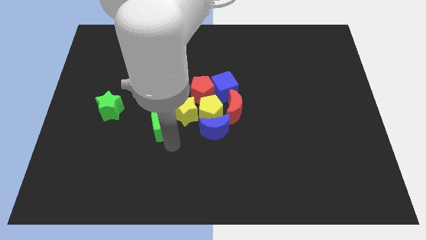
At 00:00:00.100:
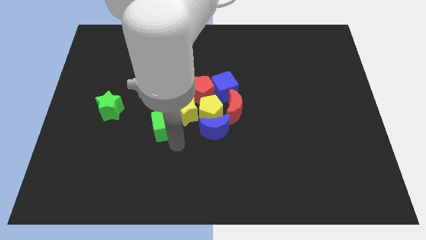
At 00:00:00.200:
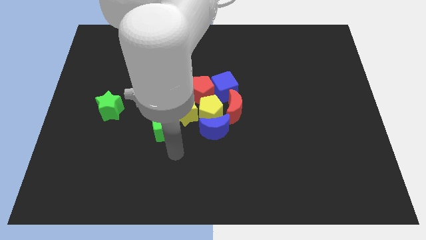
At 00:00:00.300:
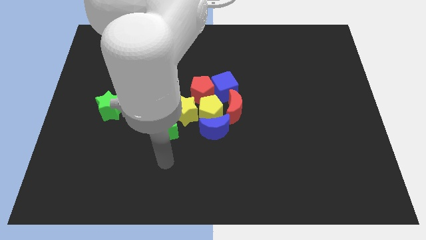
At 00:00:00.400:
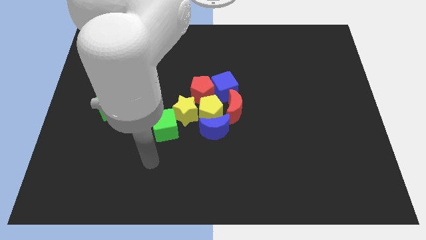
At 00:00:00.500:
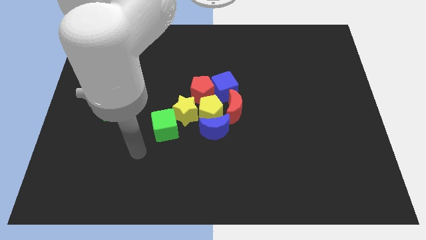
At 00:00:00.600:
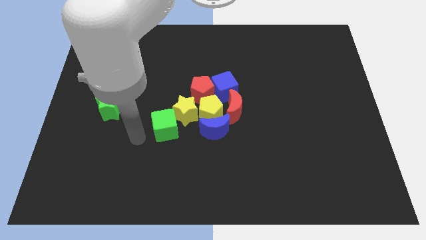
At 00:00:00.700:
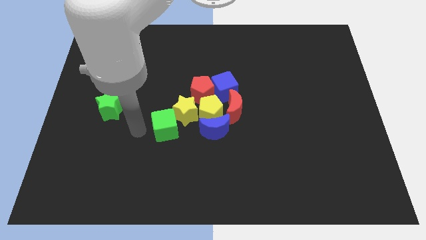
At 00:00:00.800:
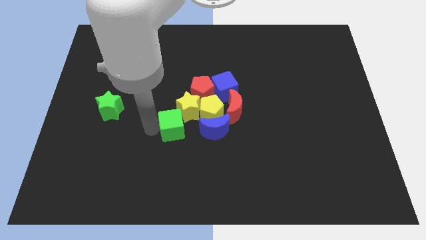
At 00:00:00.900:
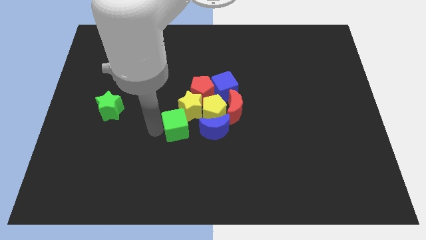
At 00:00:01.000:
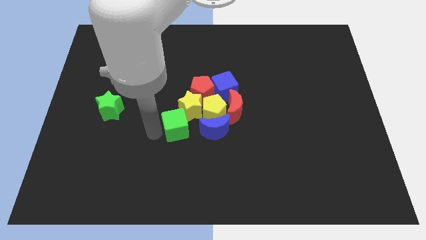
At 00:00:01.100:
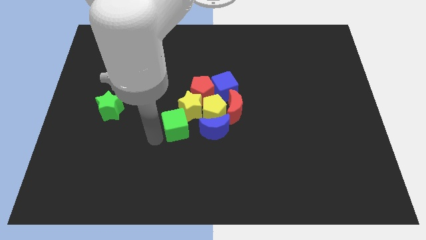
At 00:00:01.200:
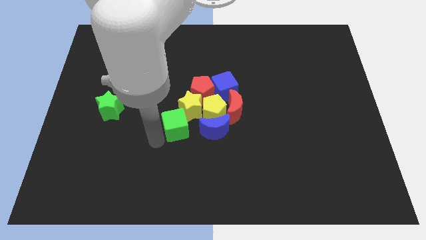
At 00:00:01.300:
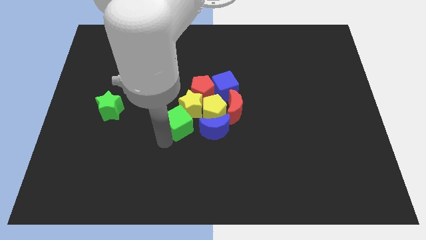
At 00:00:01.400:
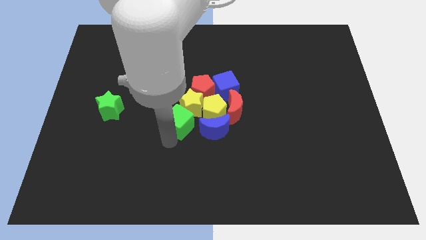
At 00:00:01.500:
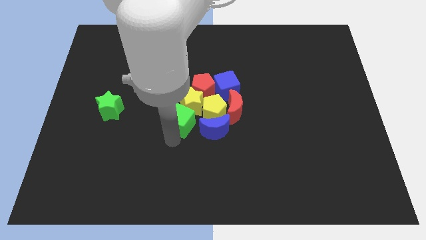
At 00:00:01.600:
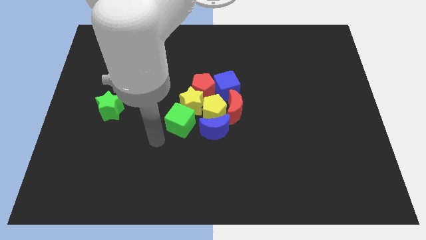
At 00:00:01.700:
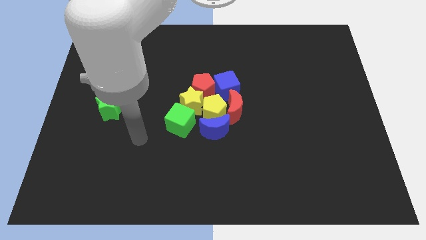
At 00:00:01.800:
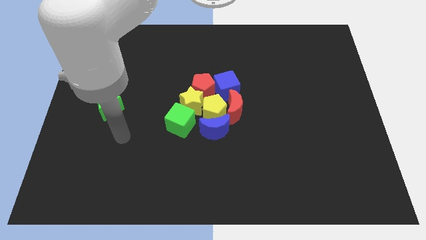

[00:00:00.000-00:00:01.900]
slightly push the green cube into the yellow star

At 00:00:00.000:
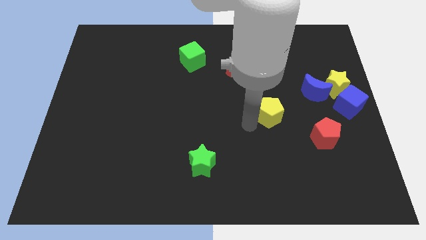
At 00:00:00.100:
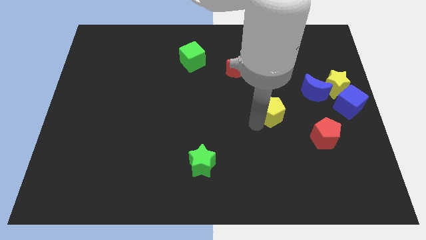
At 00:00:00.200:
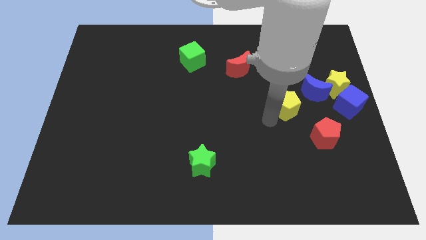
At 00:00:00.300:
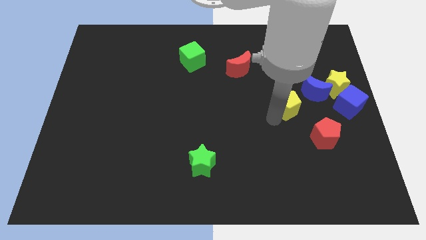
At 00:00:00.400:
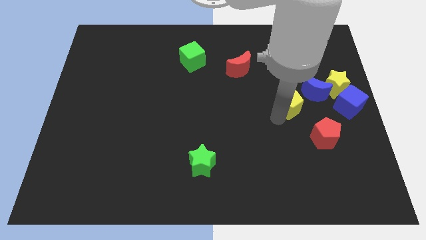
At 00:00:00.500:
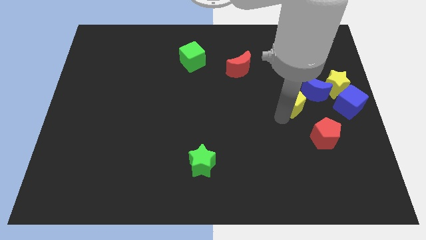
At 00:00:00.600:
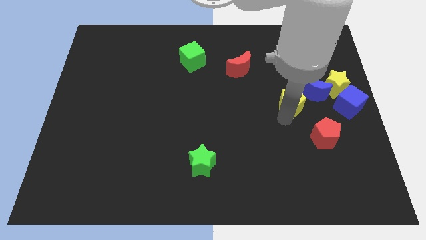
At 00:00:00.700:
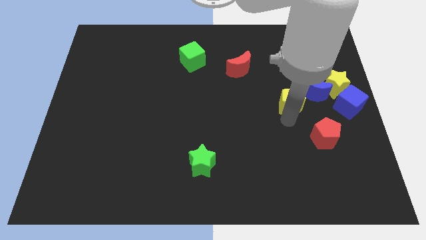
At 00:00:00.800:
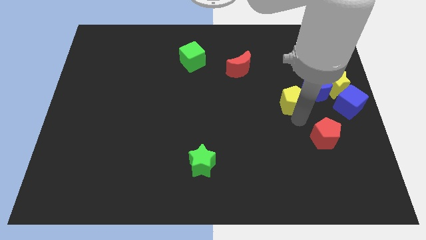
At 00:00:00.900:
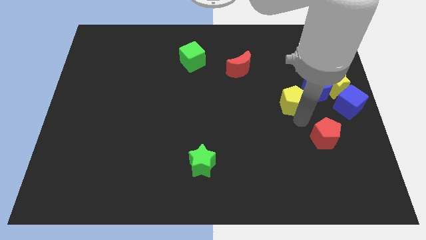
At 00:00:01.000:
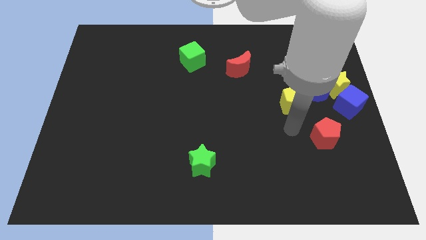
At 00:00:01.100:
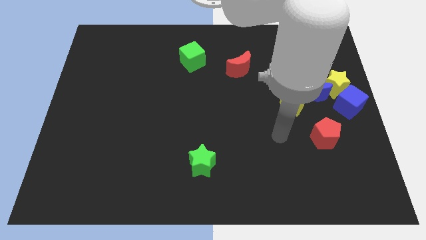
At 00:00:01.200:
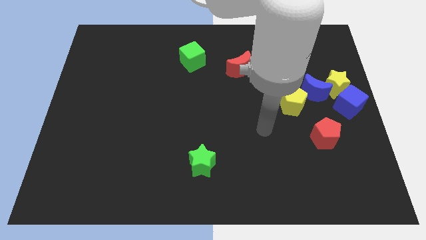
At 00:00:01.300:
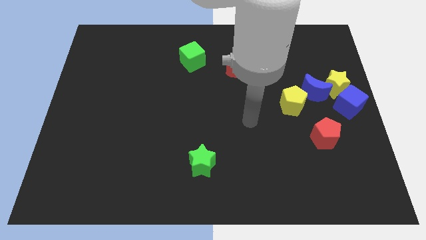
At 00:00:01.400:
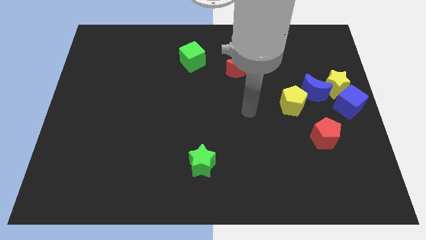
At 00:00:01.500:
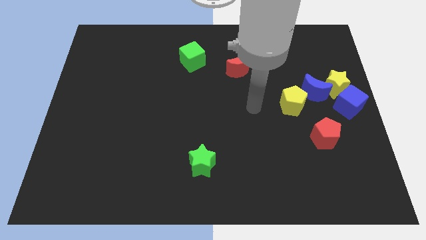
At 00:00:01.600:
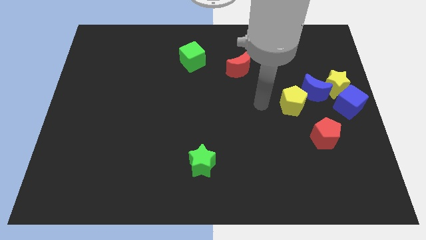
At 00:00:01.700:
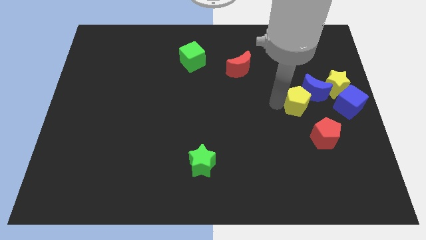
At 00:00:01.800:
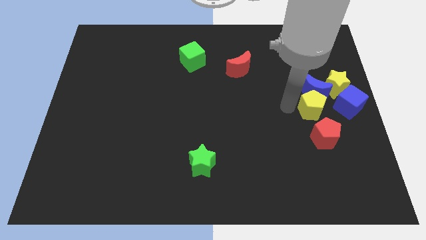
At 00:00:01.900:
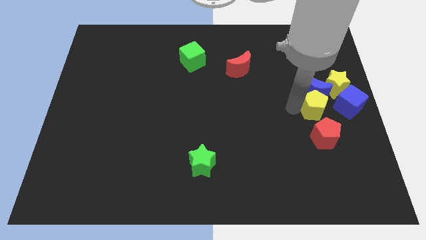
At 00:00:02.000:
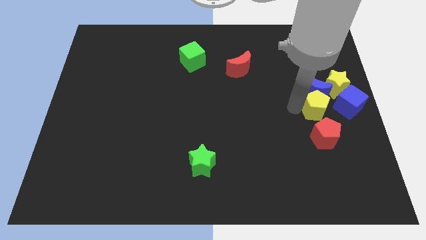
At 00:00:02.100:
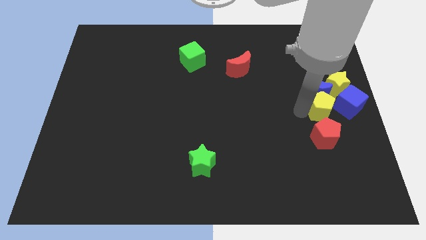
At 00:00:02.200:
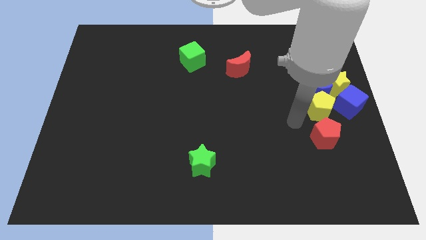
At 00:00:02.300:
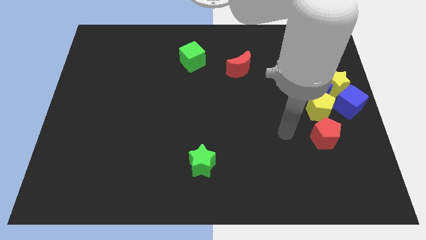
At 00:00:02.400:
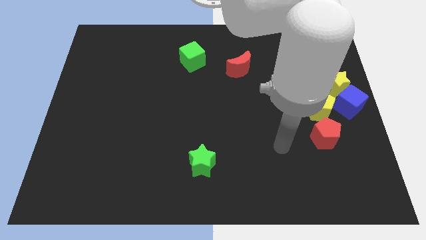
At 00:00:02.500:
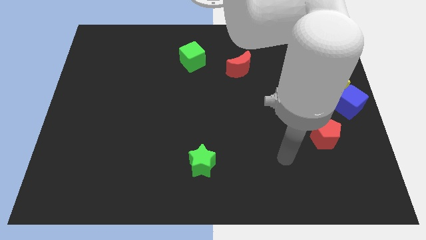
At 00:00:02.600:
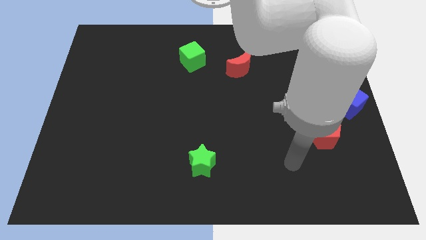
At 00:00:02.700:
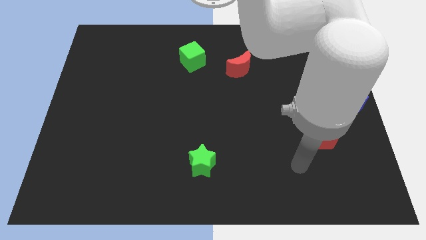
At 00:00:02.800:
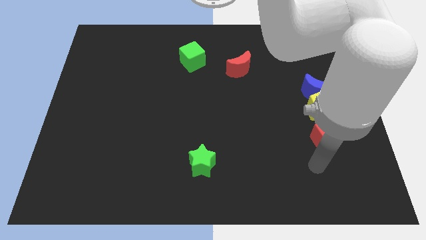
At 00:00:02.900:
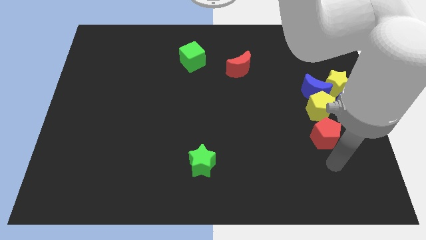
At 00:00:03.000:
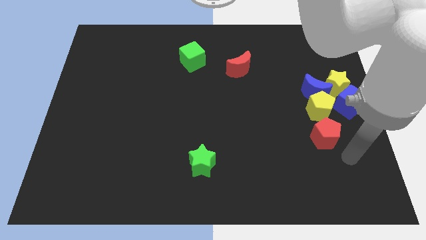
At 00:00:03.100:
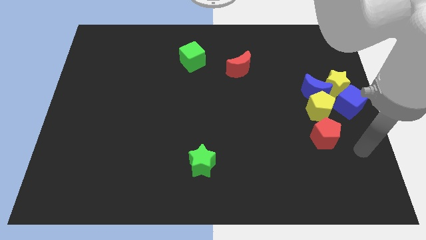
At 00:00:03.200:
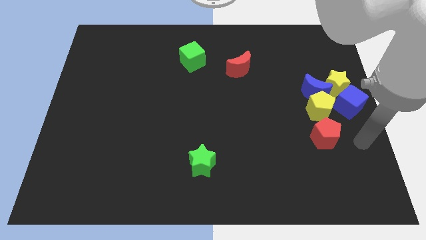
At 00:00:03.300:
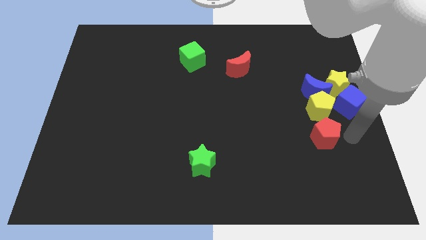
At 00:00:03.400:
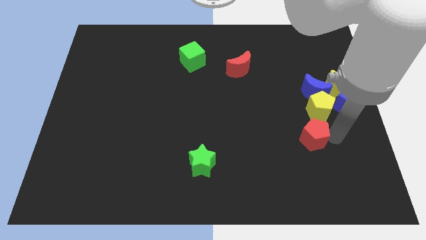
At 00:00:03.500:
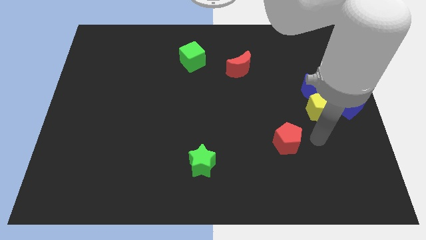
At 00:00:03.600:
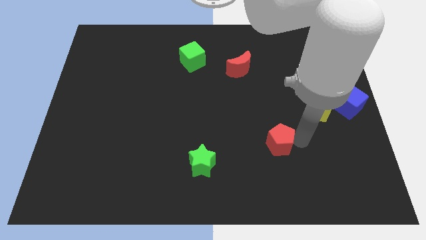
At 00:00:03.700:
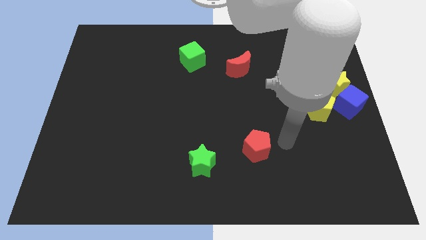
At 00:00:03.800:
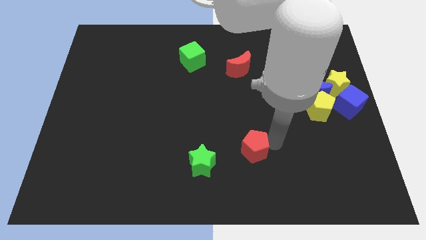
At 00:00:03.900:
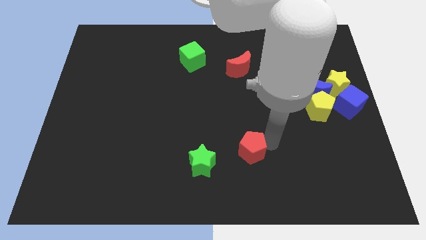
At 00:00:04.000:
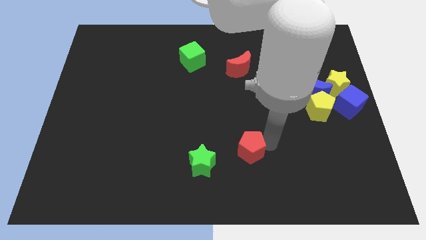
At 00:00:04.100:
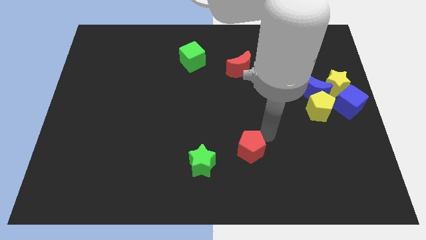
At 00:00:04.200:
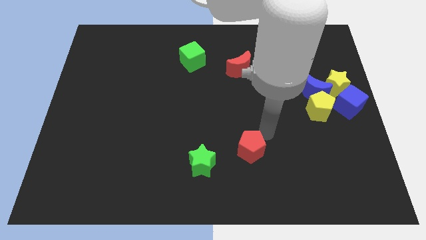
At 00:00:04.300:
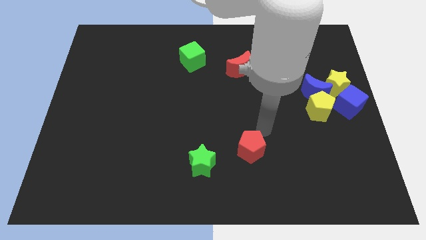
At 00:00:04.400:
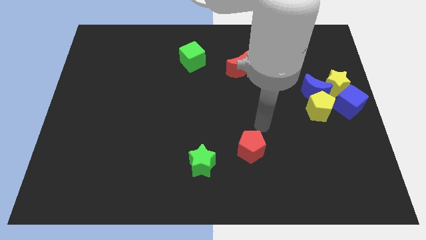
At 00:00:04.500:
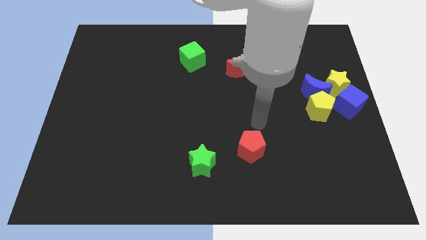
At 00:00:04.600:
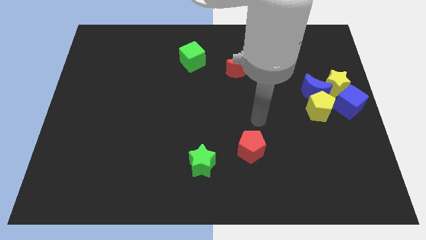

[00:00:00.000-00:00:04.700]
push the red pentagon towards the green star

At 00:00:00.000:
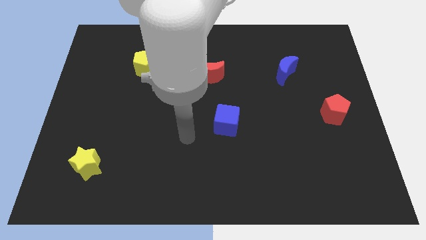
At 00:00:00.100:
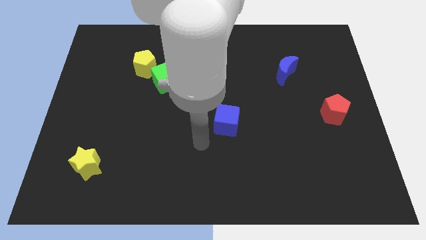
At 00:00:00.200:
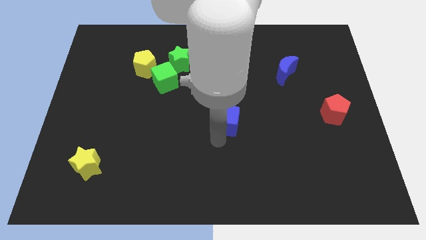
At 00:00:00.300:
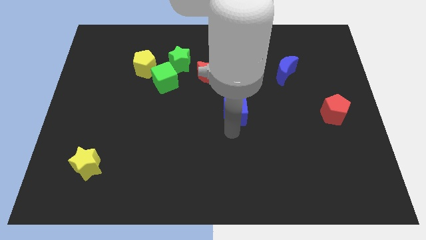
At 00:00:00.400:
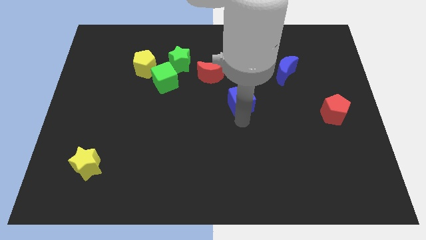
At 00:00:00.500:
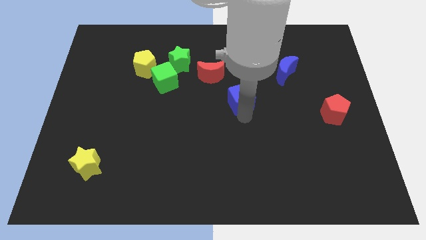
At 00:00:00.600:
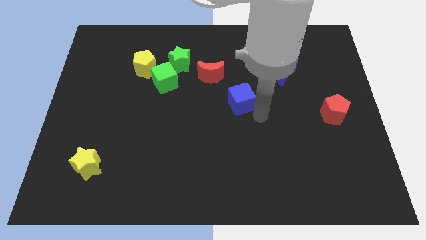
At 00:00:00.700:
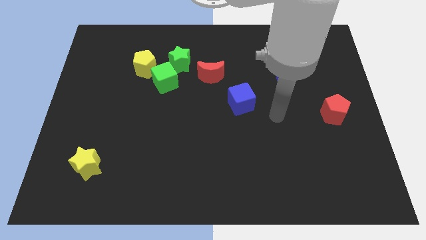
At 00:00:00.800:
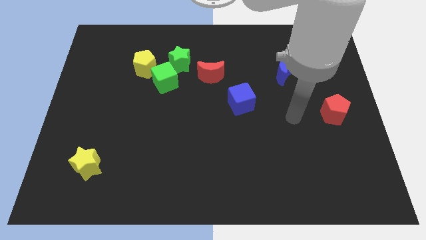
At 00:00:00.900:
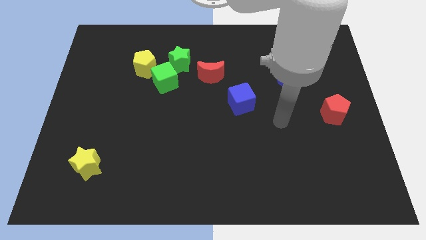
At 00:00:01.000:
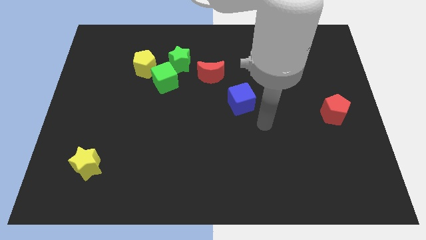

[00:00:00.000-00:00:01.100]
adjust the blue cube at the center of the board

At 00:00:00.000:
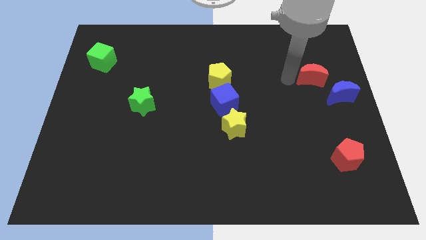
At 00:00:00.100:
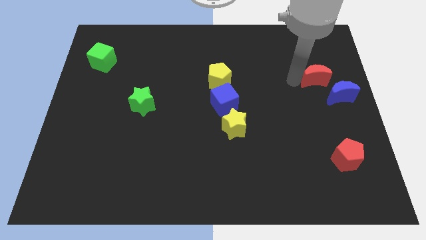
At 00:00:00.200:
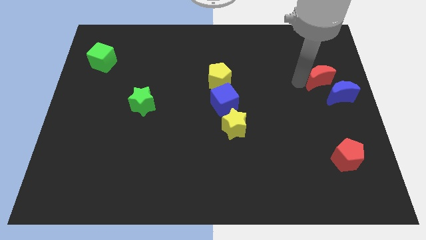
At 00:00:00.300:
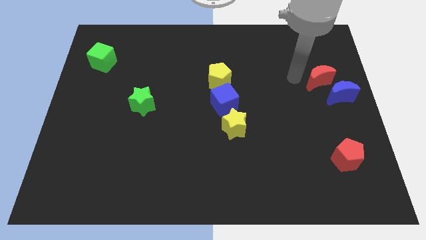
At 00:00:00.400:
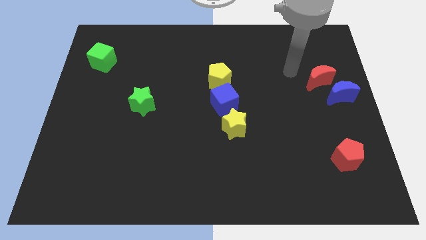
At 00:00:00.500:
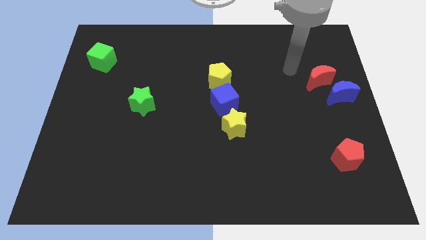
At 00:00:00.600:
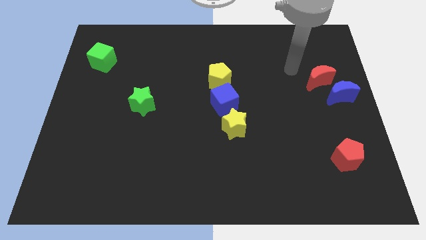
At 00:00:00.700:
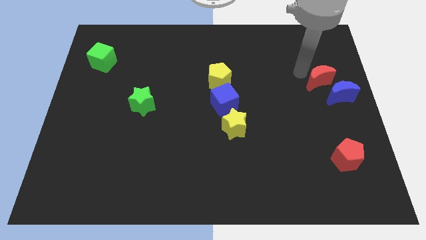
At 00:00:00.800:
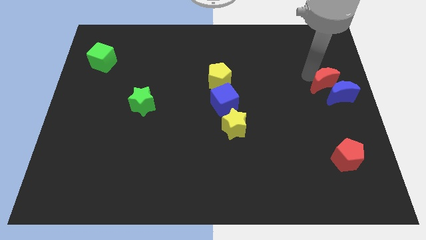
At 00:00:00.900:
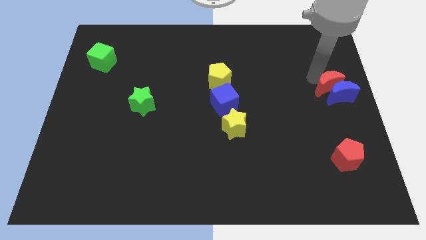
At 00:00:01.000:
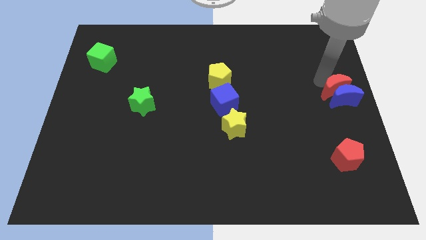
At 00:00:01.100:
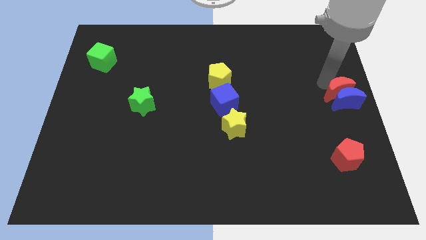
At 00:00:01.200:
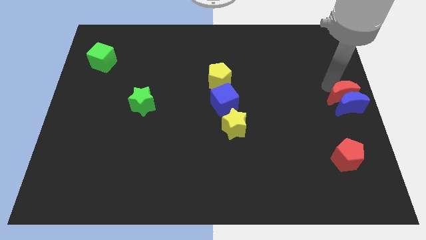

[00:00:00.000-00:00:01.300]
push the red moon into the blue moon
